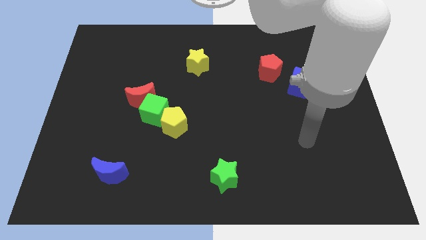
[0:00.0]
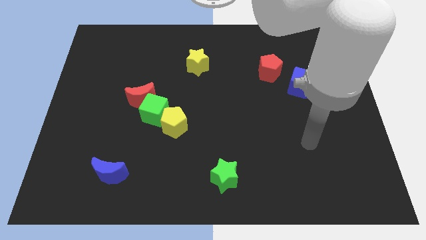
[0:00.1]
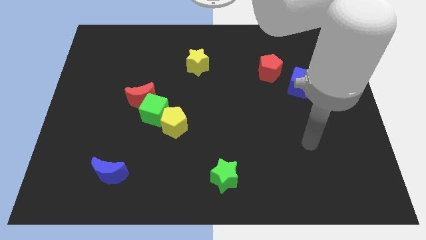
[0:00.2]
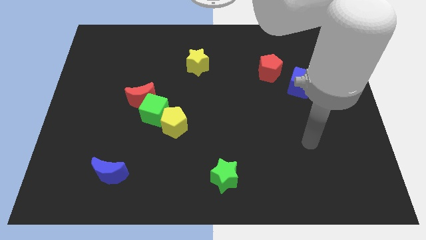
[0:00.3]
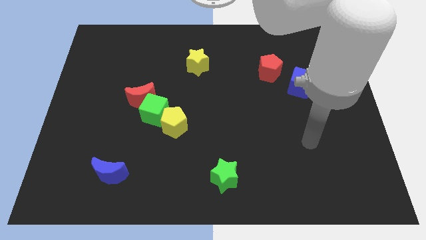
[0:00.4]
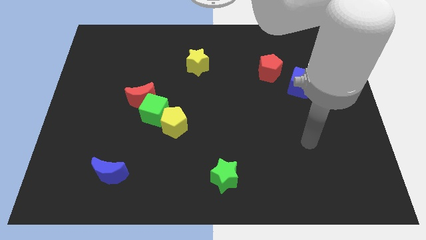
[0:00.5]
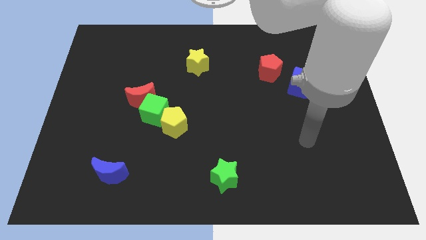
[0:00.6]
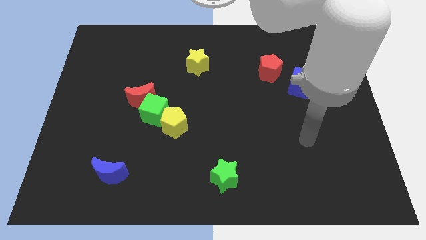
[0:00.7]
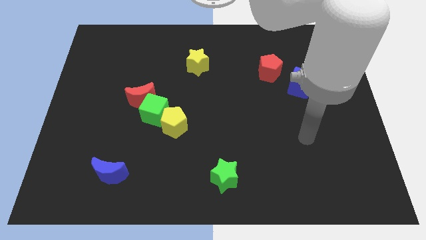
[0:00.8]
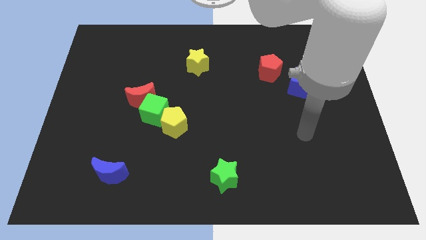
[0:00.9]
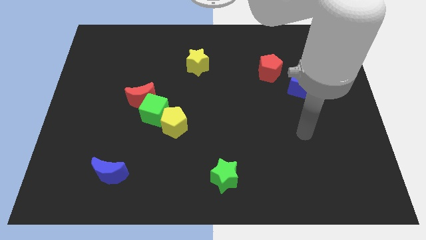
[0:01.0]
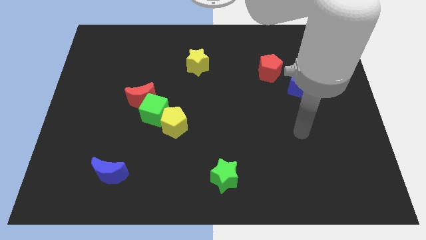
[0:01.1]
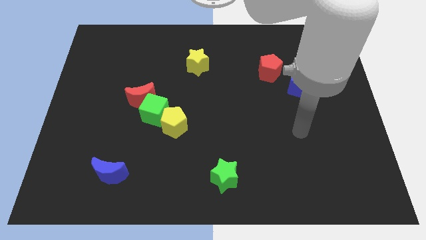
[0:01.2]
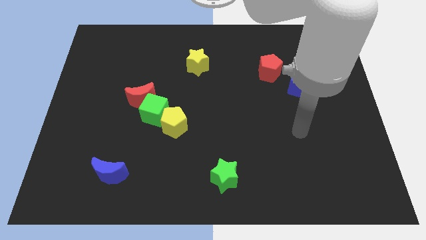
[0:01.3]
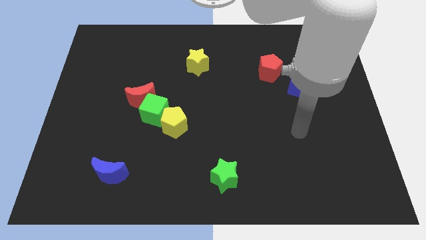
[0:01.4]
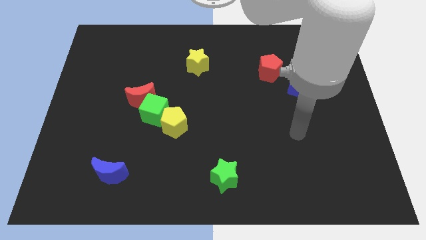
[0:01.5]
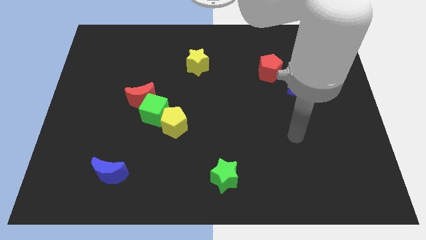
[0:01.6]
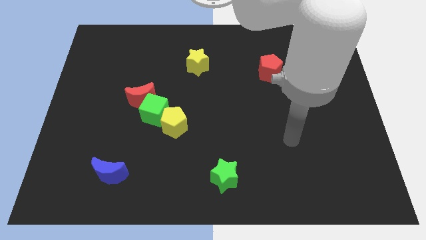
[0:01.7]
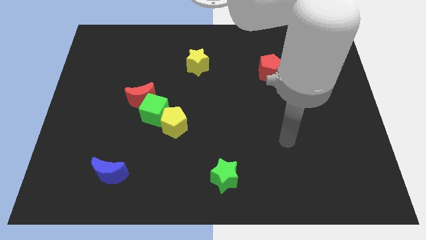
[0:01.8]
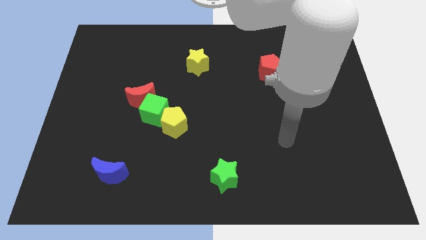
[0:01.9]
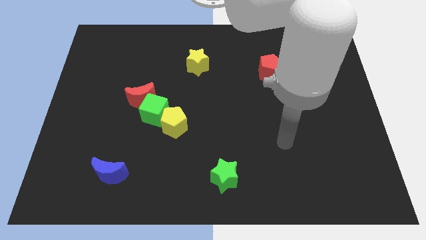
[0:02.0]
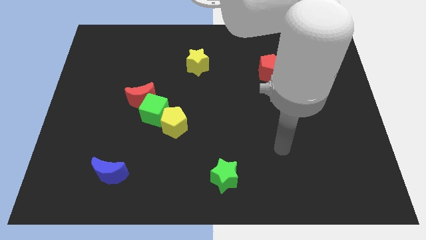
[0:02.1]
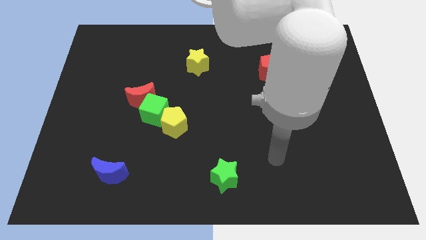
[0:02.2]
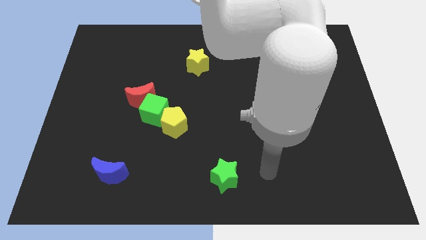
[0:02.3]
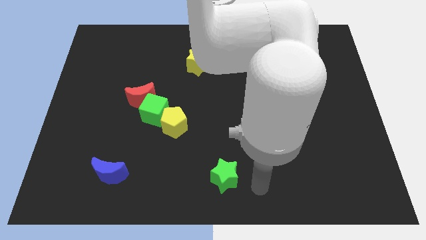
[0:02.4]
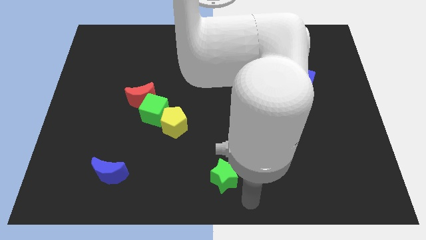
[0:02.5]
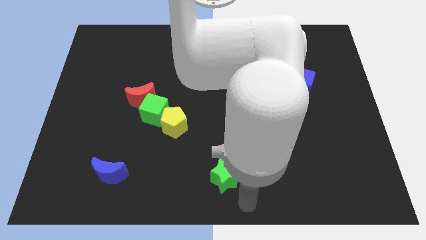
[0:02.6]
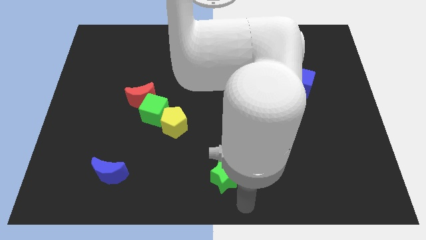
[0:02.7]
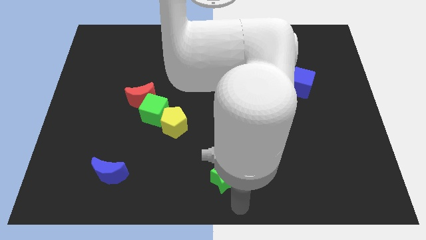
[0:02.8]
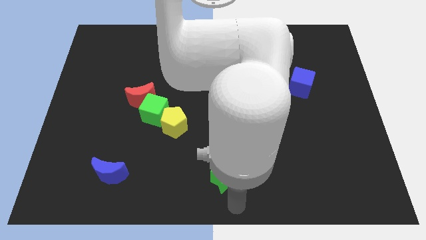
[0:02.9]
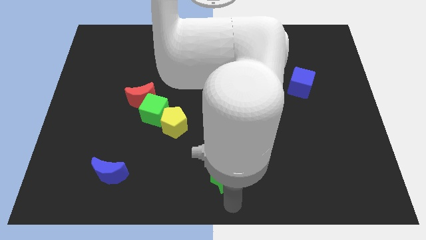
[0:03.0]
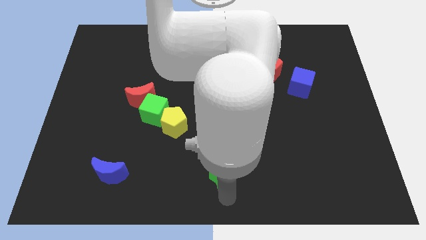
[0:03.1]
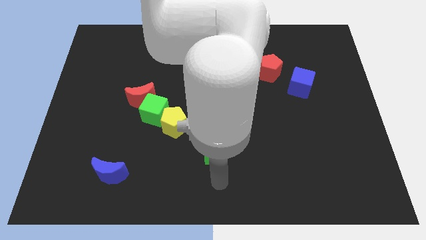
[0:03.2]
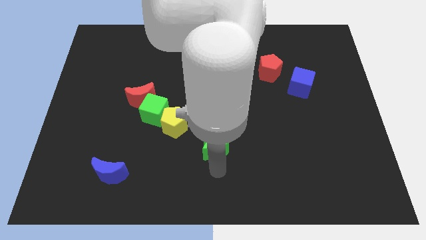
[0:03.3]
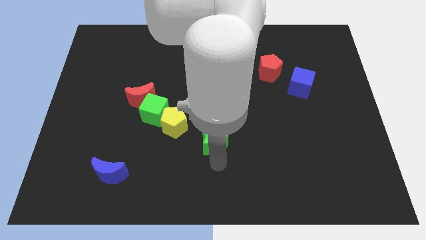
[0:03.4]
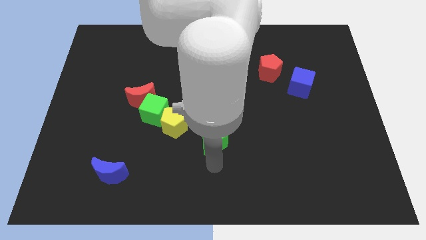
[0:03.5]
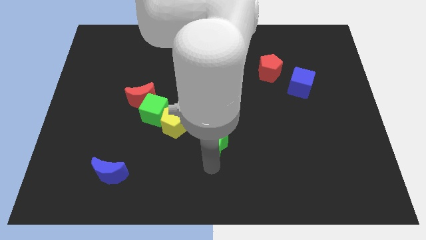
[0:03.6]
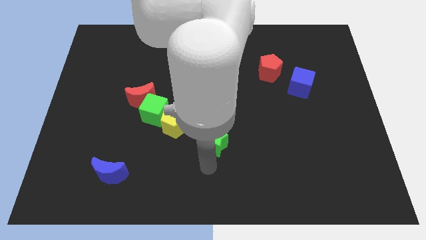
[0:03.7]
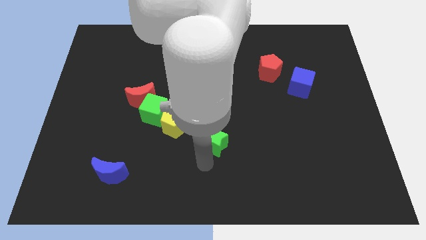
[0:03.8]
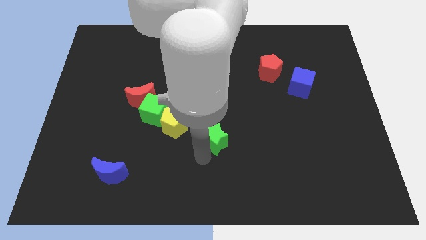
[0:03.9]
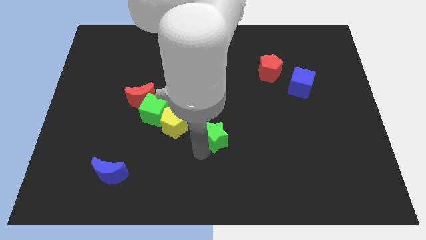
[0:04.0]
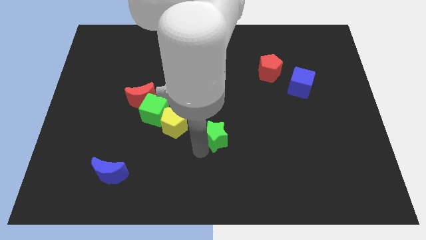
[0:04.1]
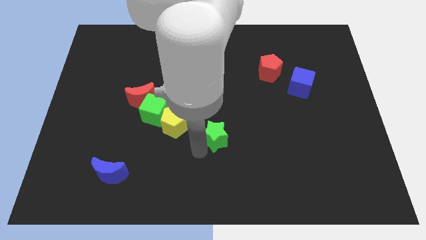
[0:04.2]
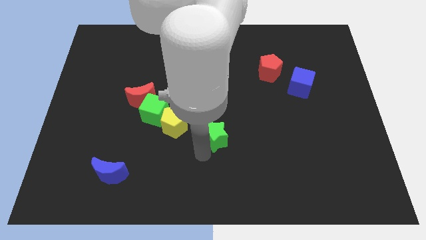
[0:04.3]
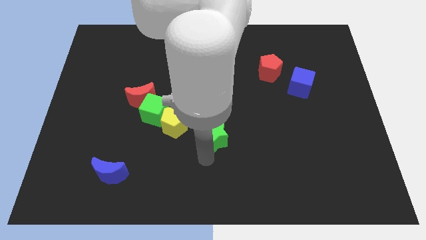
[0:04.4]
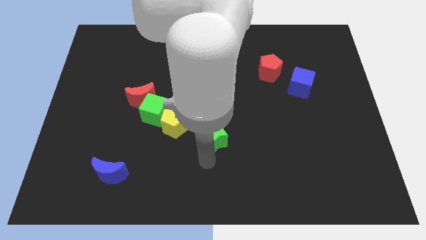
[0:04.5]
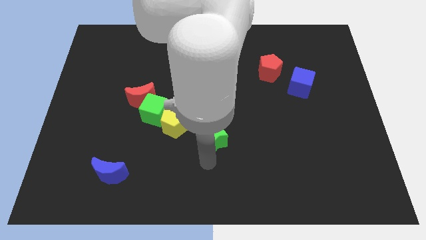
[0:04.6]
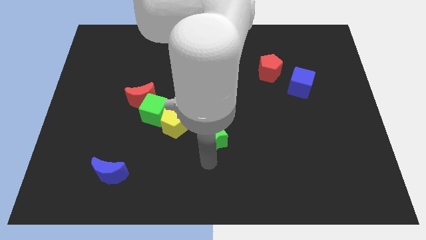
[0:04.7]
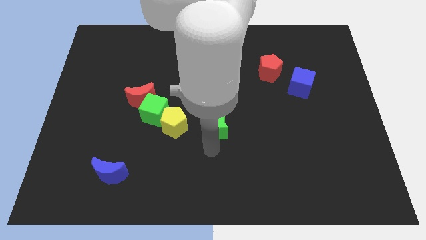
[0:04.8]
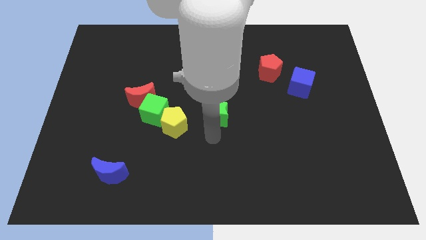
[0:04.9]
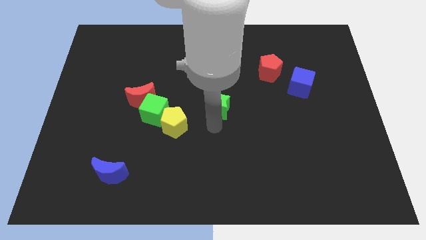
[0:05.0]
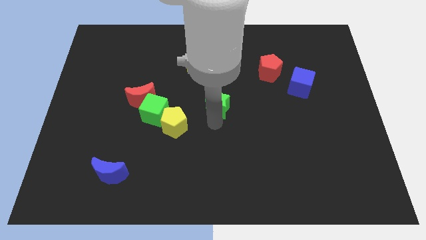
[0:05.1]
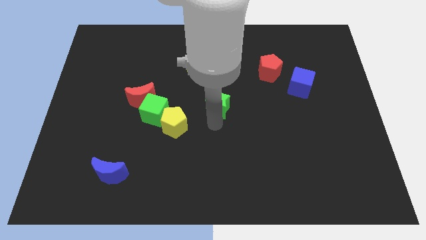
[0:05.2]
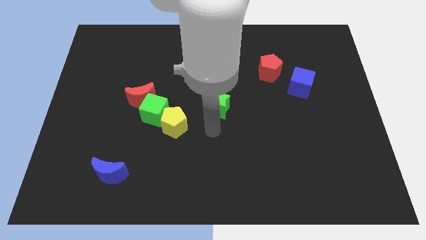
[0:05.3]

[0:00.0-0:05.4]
push the green star to the center of the board

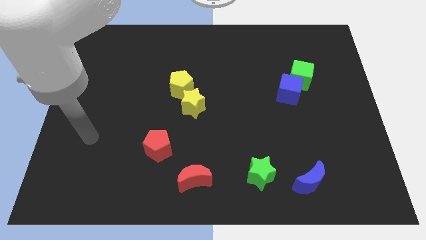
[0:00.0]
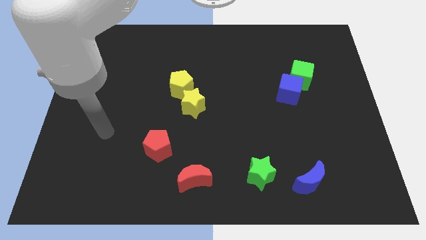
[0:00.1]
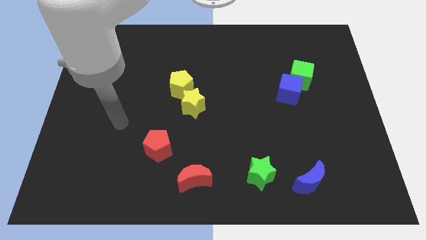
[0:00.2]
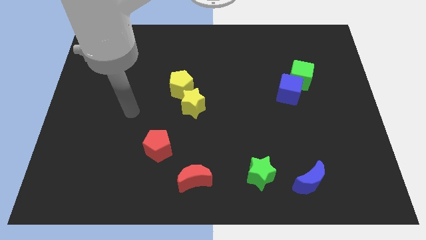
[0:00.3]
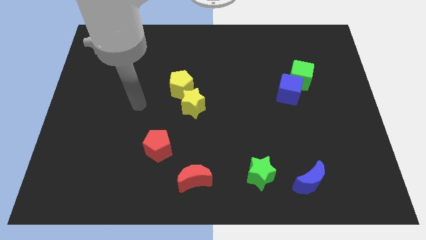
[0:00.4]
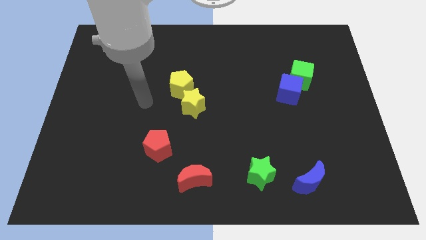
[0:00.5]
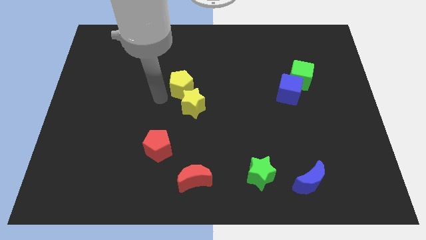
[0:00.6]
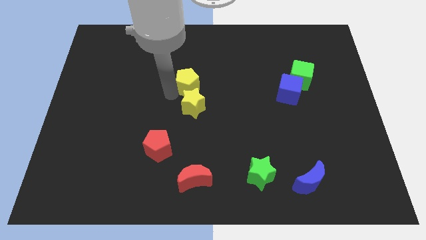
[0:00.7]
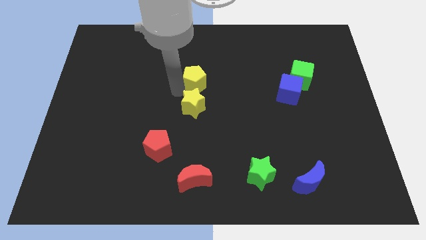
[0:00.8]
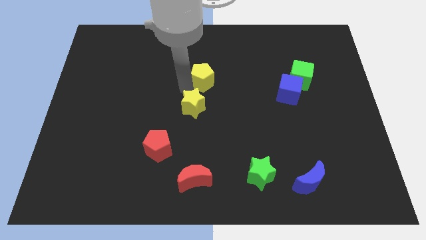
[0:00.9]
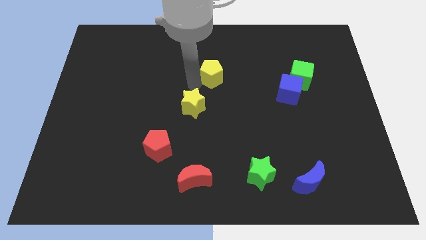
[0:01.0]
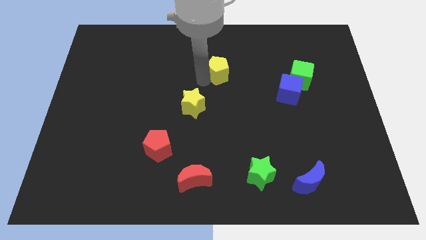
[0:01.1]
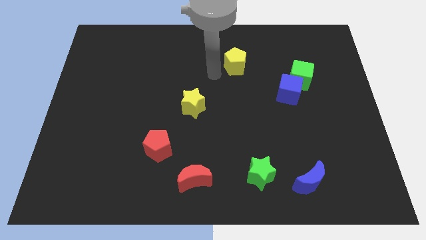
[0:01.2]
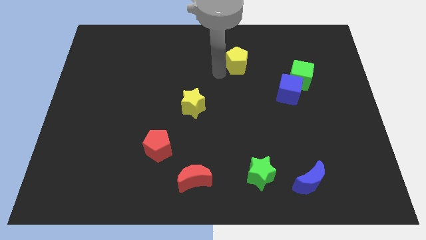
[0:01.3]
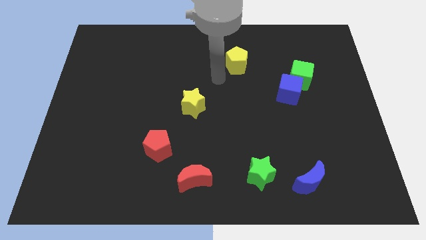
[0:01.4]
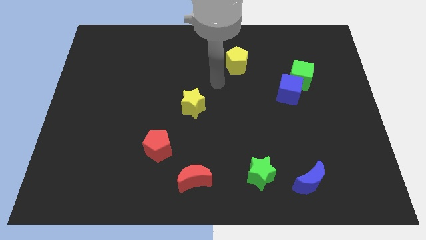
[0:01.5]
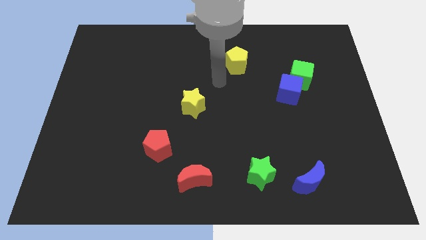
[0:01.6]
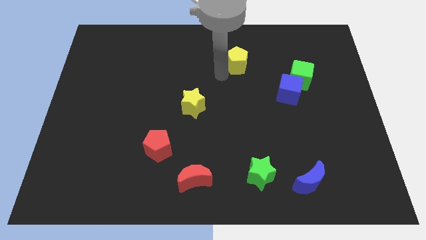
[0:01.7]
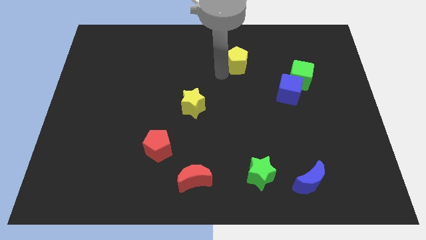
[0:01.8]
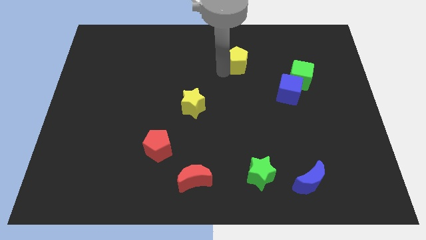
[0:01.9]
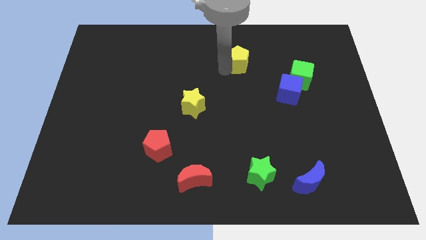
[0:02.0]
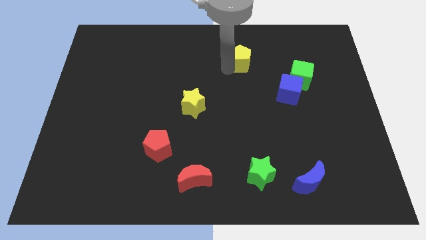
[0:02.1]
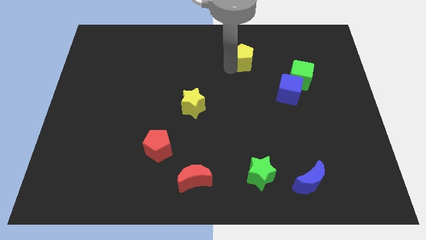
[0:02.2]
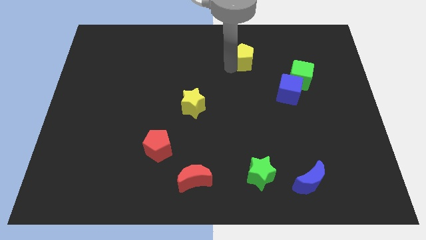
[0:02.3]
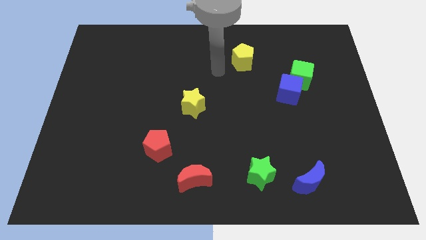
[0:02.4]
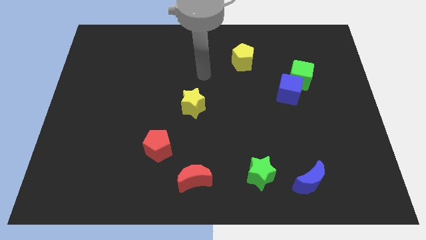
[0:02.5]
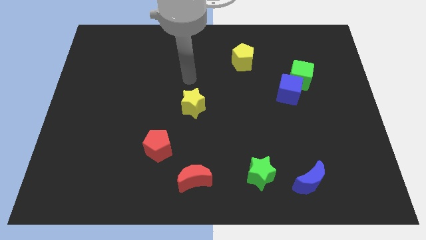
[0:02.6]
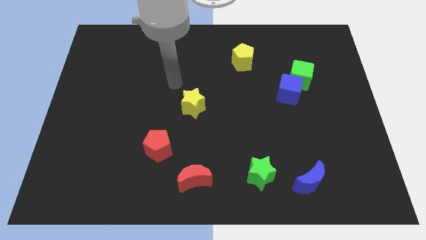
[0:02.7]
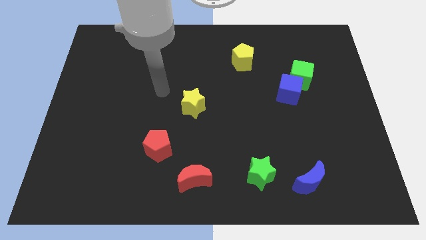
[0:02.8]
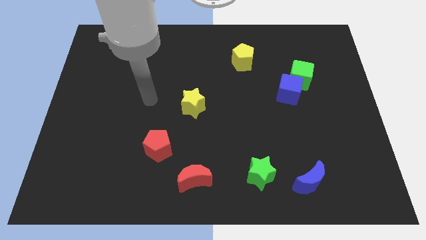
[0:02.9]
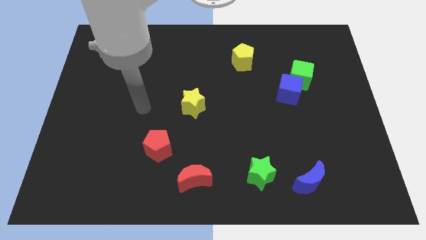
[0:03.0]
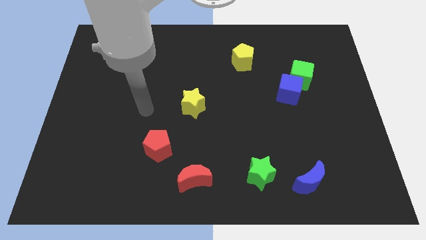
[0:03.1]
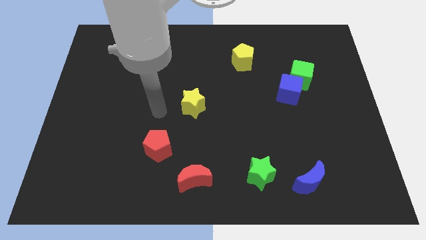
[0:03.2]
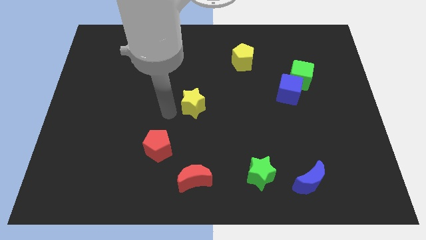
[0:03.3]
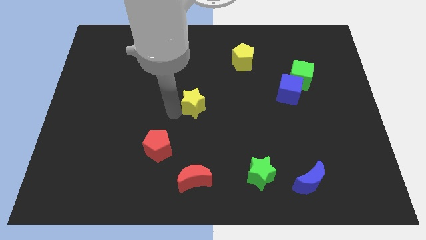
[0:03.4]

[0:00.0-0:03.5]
separate the yellow pentagon from the yellow star
